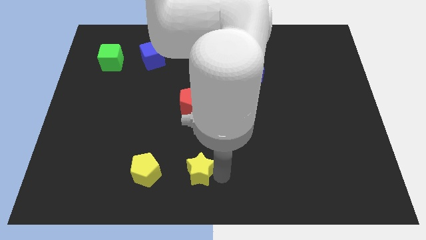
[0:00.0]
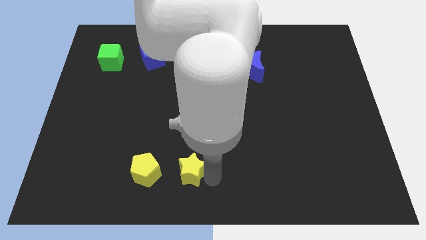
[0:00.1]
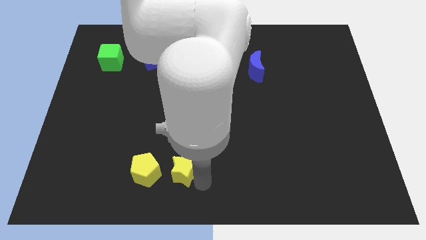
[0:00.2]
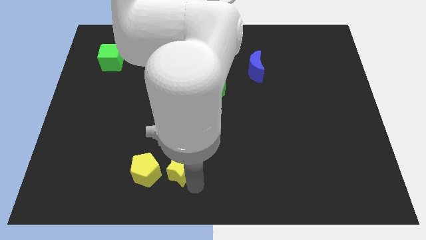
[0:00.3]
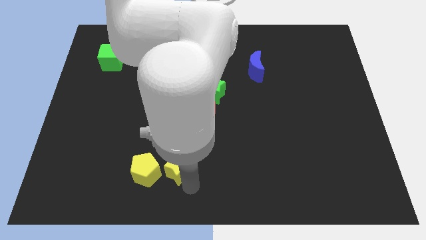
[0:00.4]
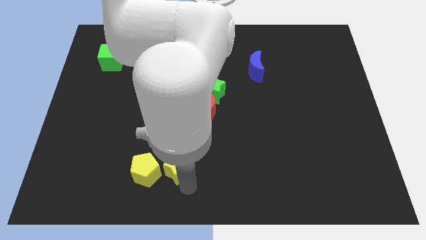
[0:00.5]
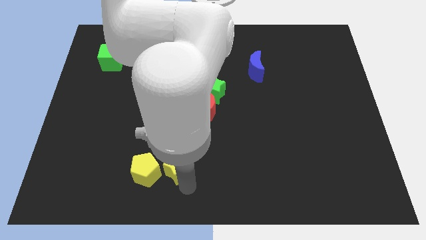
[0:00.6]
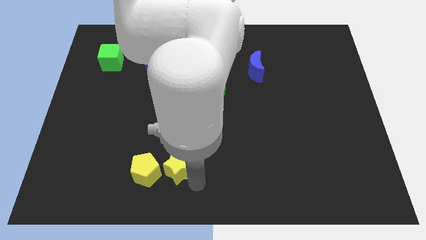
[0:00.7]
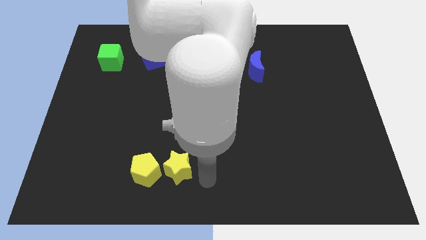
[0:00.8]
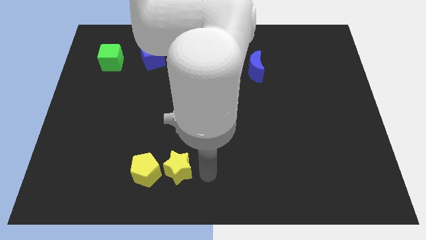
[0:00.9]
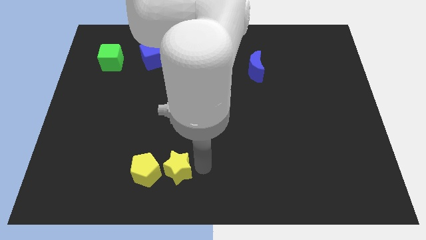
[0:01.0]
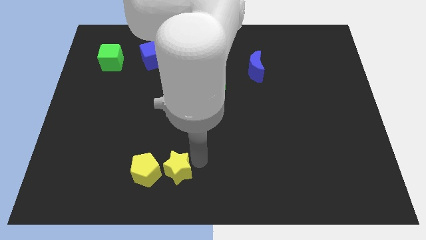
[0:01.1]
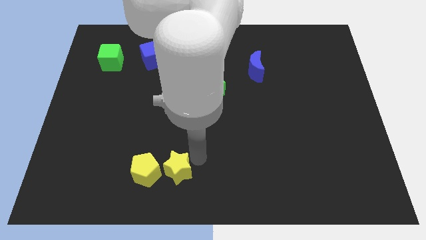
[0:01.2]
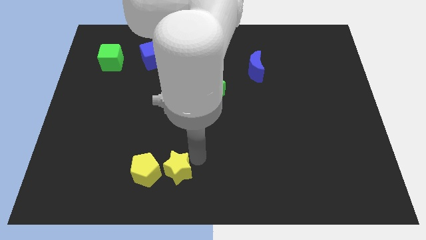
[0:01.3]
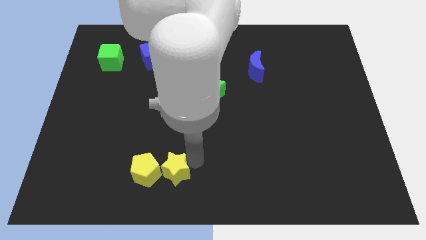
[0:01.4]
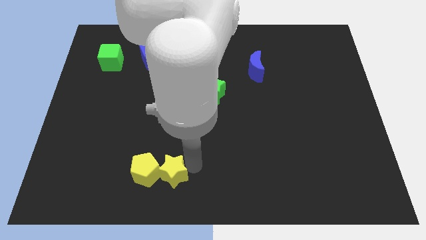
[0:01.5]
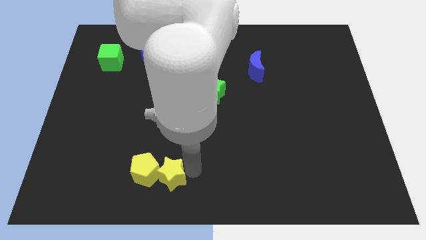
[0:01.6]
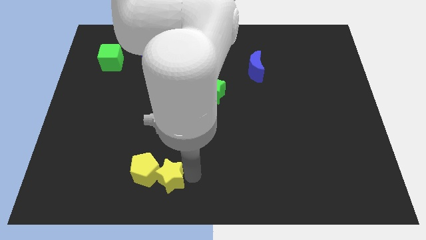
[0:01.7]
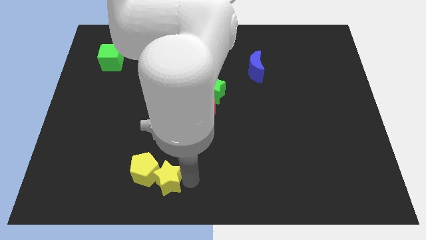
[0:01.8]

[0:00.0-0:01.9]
push the yellow star close to the yellow pentagon

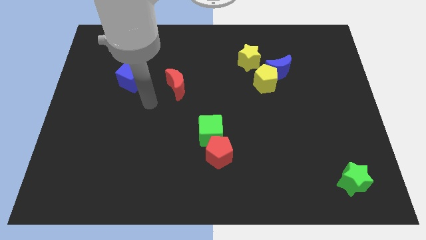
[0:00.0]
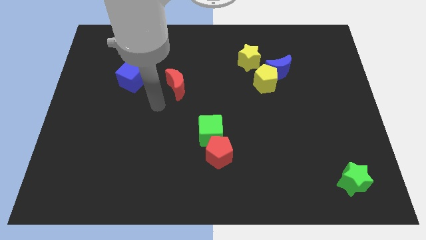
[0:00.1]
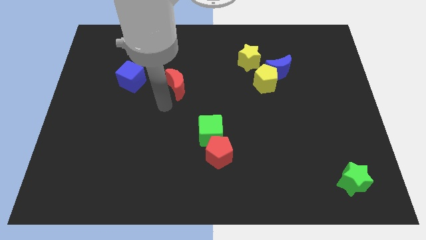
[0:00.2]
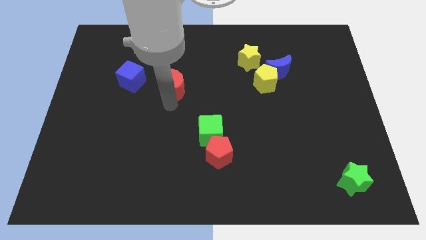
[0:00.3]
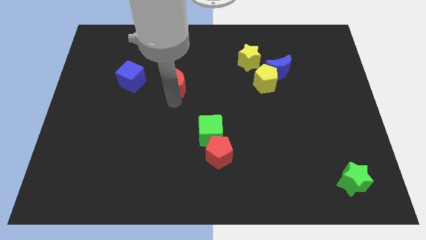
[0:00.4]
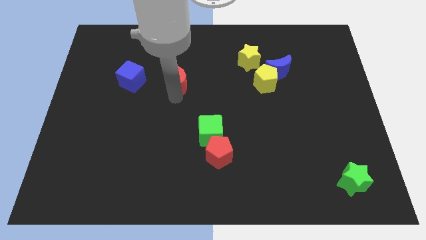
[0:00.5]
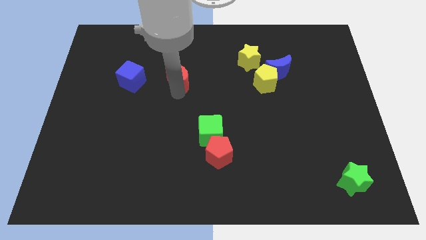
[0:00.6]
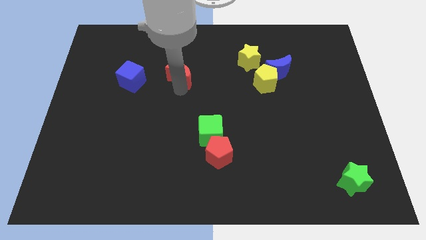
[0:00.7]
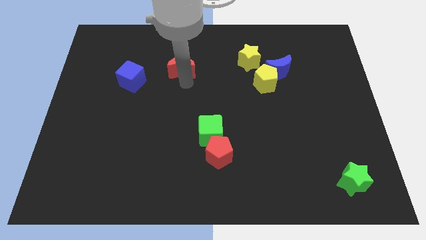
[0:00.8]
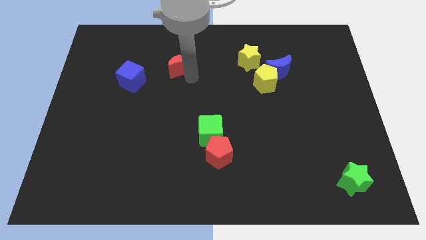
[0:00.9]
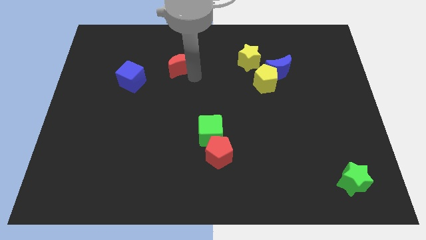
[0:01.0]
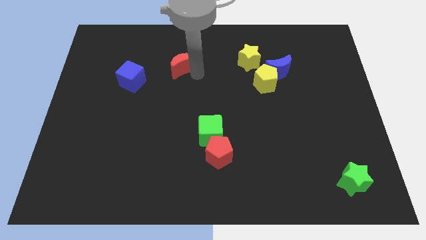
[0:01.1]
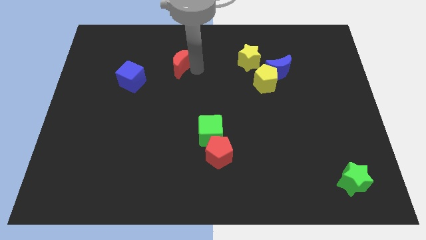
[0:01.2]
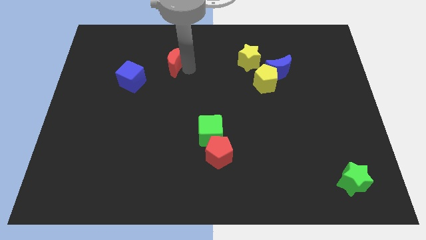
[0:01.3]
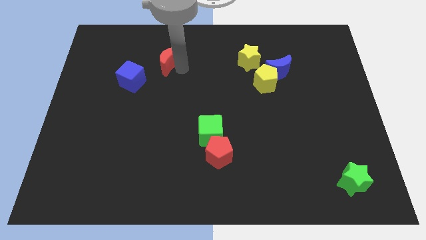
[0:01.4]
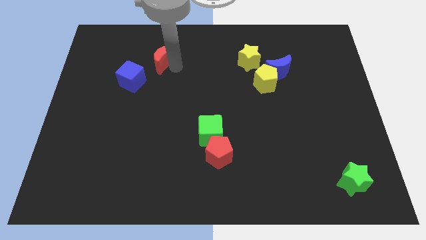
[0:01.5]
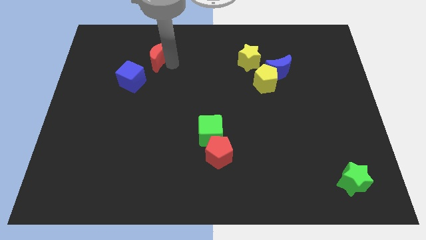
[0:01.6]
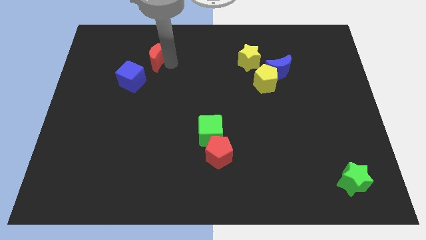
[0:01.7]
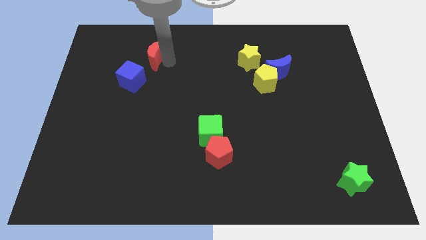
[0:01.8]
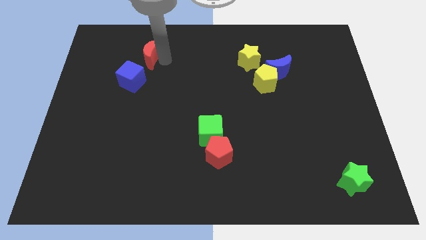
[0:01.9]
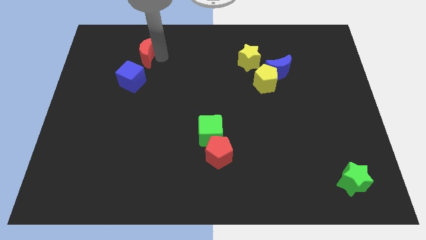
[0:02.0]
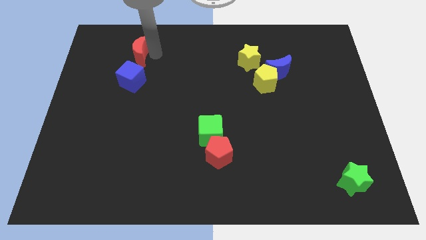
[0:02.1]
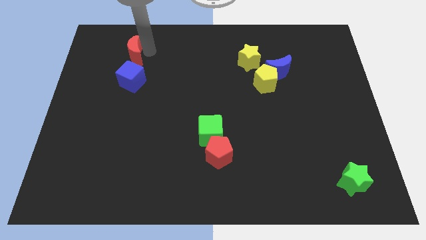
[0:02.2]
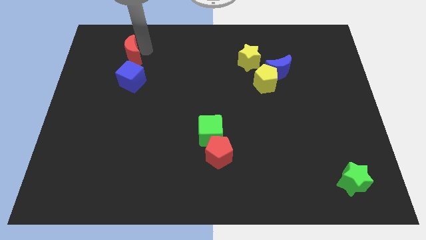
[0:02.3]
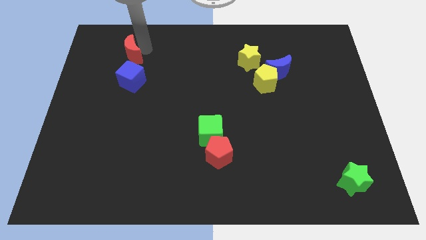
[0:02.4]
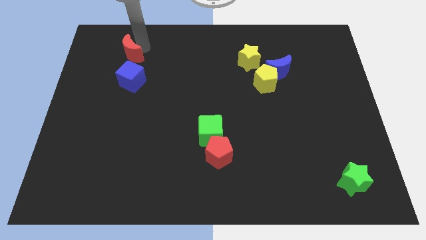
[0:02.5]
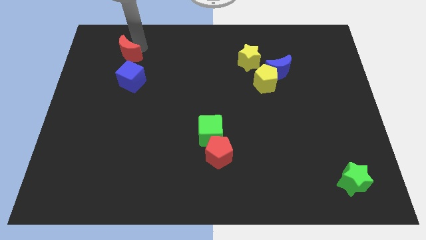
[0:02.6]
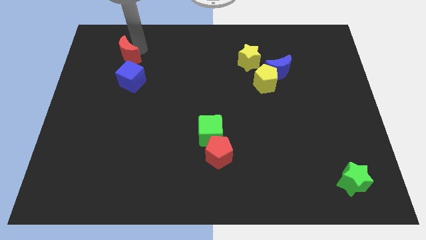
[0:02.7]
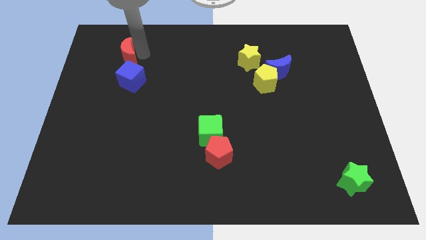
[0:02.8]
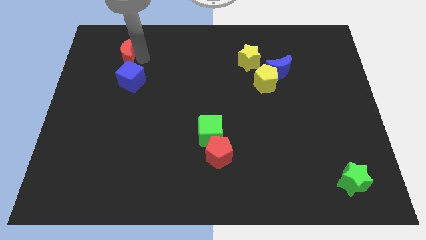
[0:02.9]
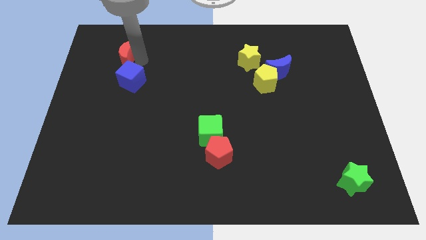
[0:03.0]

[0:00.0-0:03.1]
place the red moon above the blue cube

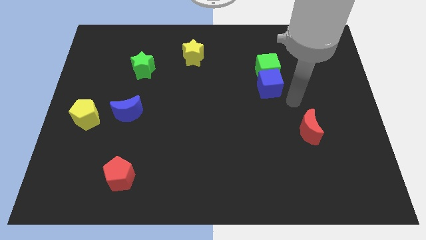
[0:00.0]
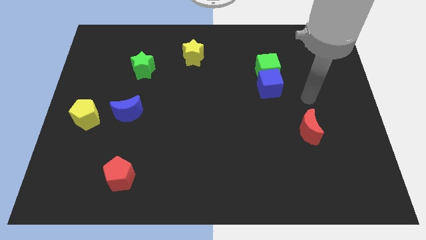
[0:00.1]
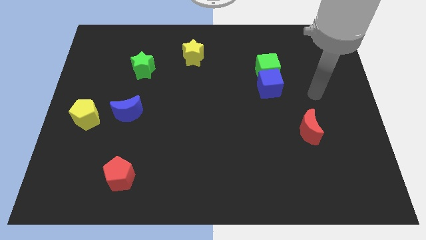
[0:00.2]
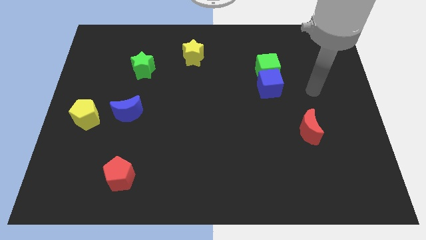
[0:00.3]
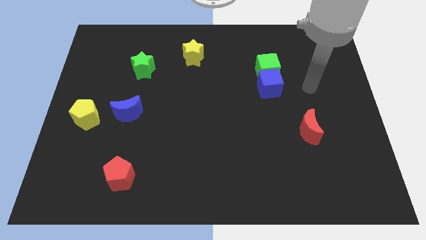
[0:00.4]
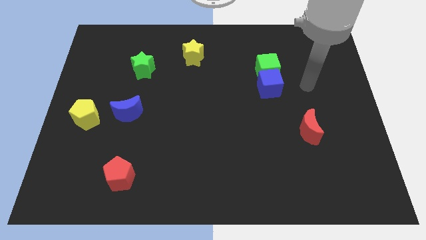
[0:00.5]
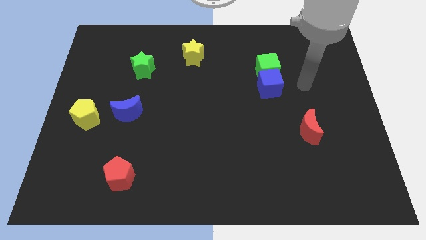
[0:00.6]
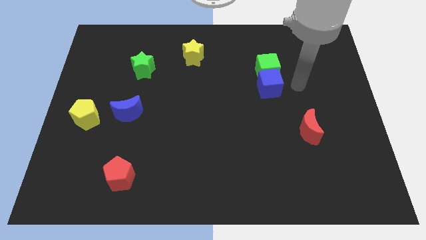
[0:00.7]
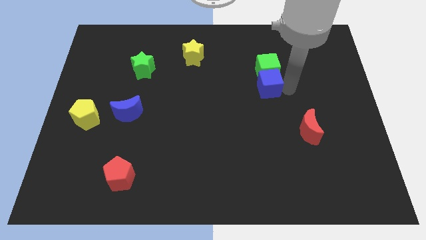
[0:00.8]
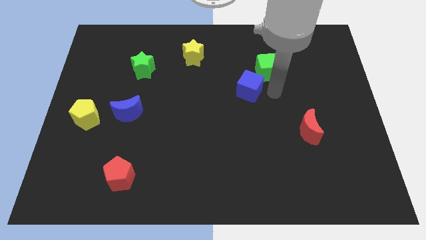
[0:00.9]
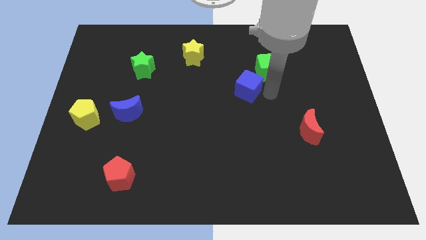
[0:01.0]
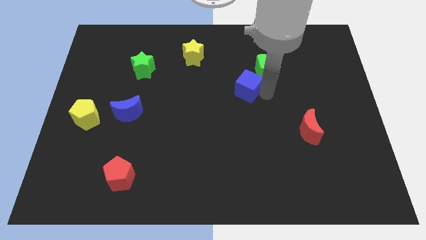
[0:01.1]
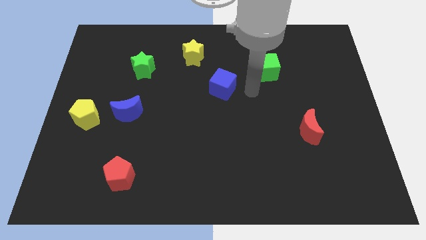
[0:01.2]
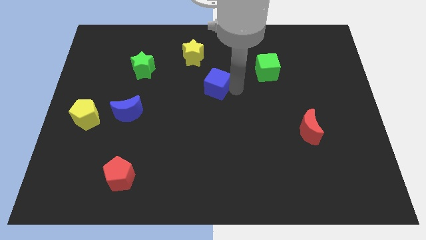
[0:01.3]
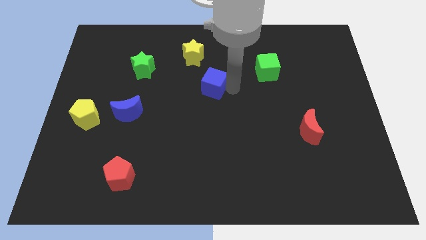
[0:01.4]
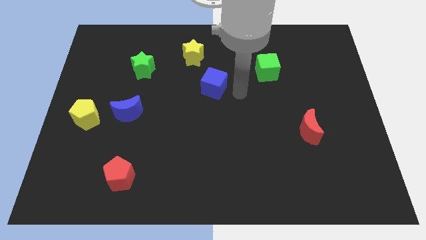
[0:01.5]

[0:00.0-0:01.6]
push the blue cube slightly to the left

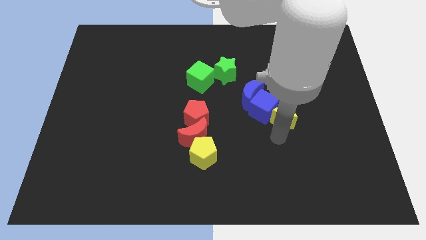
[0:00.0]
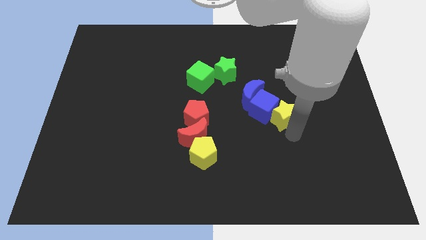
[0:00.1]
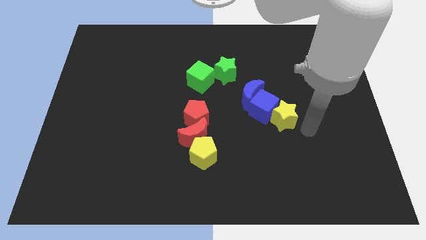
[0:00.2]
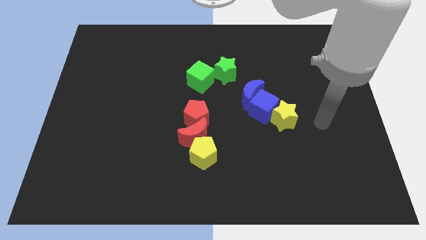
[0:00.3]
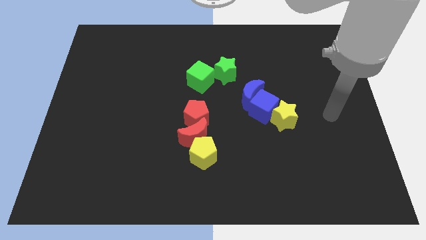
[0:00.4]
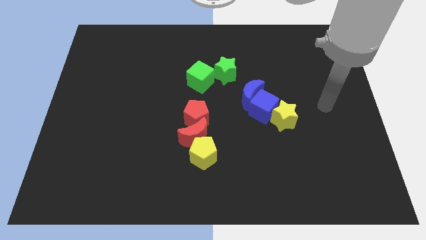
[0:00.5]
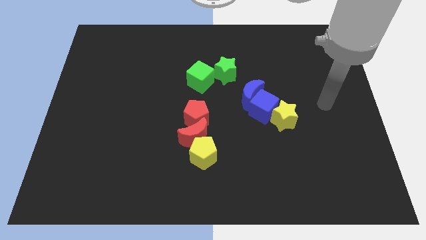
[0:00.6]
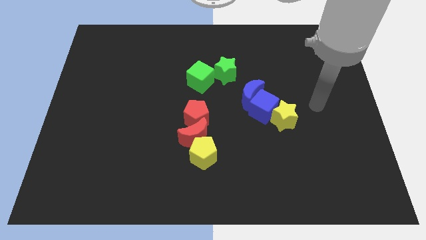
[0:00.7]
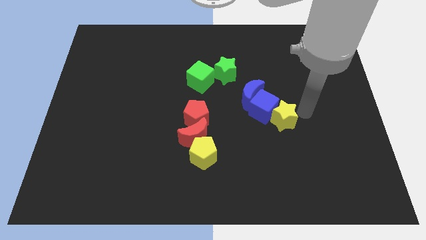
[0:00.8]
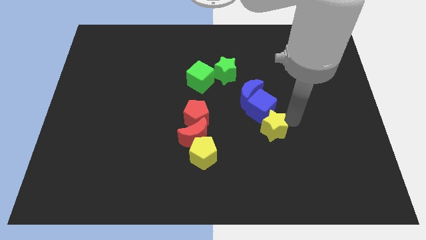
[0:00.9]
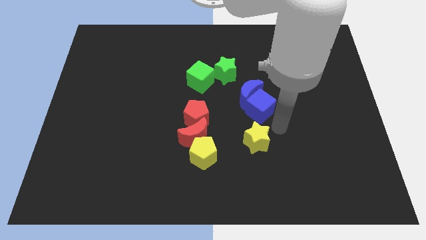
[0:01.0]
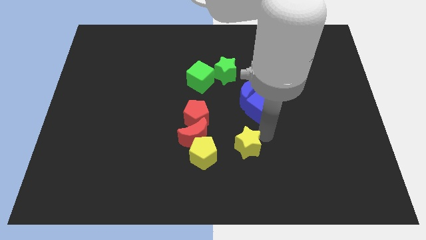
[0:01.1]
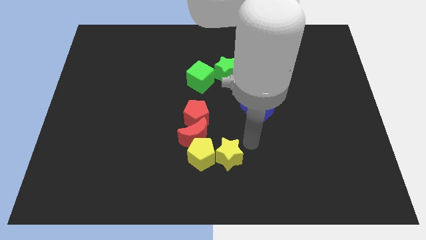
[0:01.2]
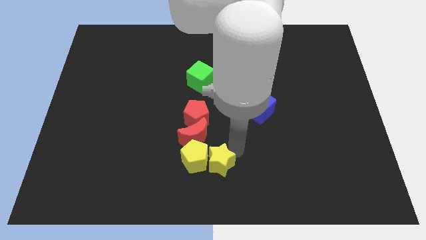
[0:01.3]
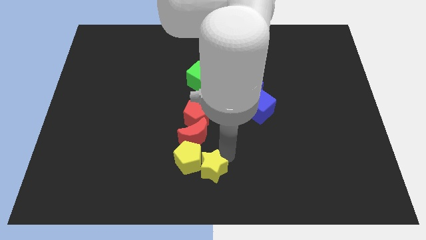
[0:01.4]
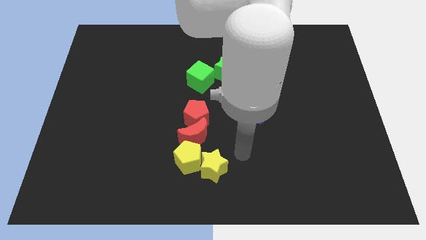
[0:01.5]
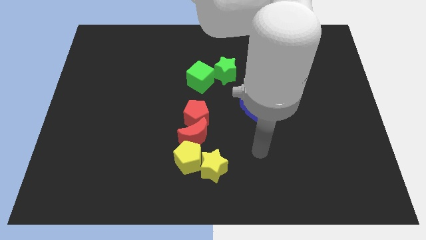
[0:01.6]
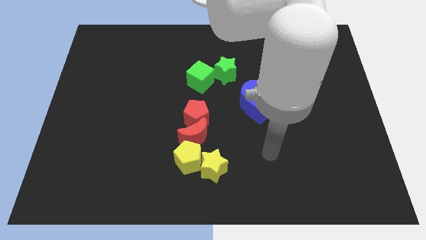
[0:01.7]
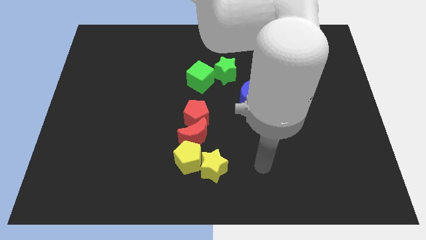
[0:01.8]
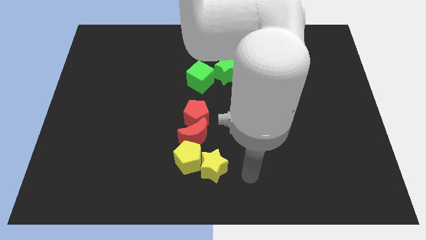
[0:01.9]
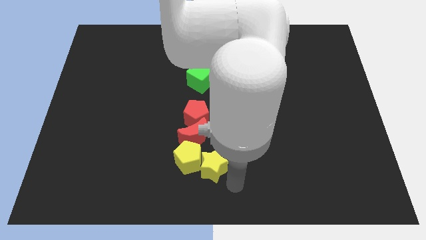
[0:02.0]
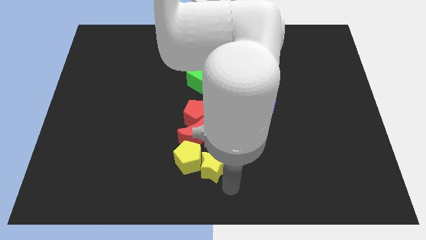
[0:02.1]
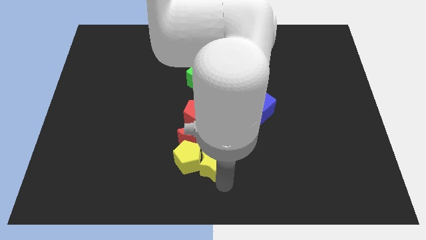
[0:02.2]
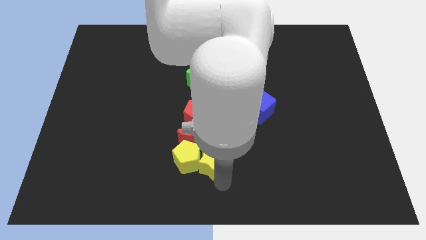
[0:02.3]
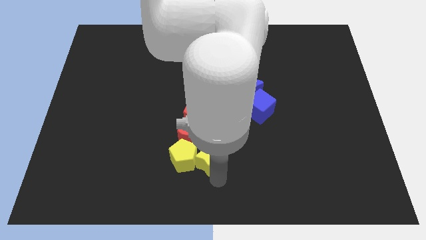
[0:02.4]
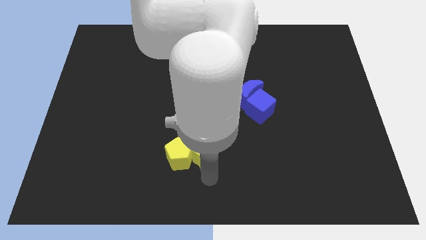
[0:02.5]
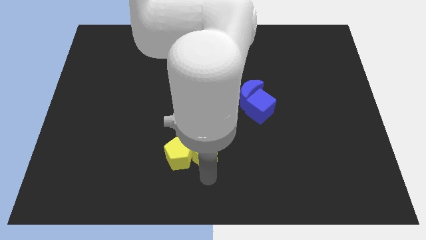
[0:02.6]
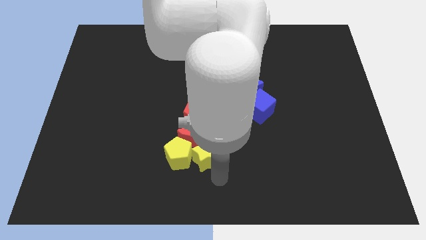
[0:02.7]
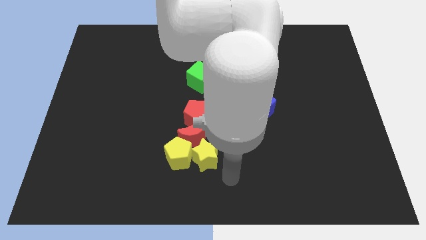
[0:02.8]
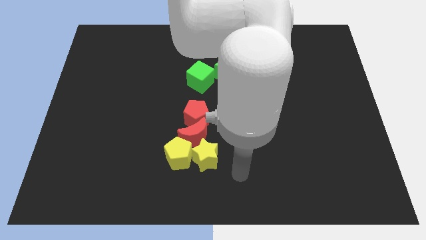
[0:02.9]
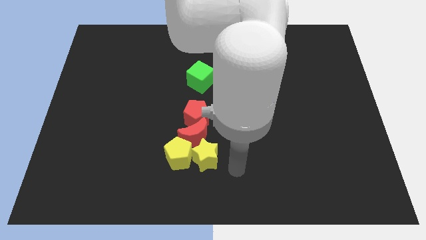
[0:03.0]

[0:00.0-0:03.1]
place a yellow star beside the yellow pentagon
